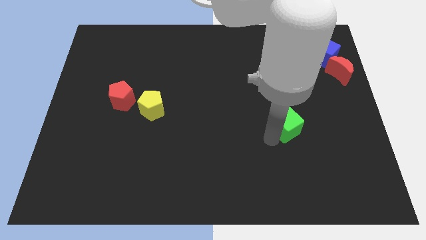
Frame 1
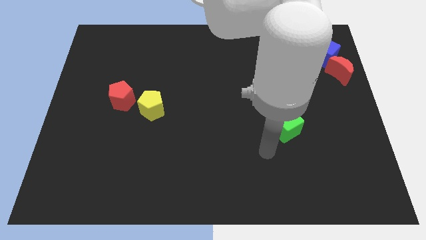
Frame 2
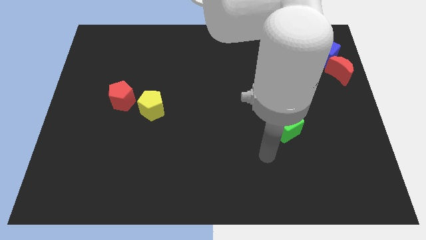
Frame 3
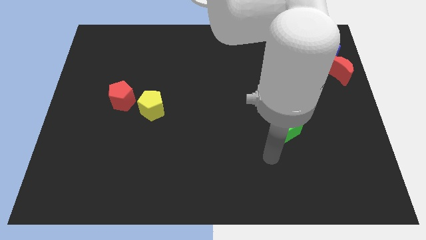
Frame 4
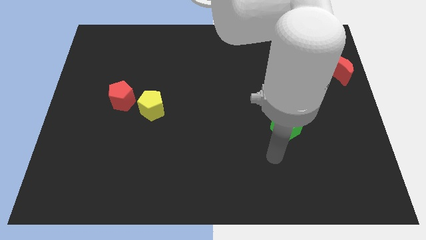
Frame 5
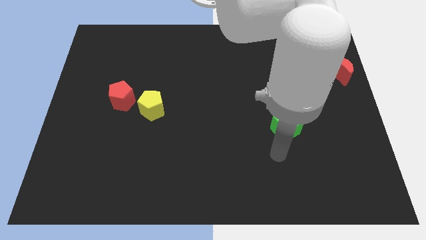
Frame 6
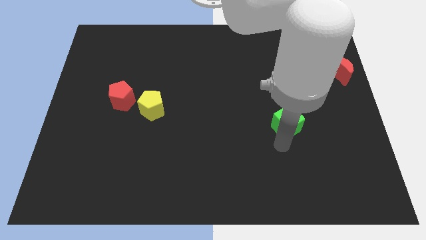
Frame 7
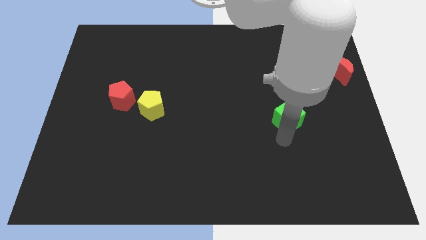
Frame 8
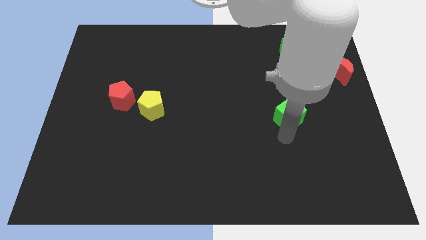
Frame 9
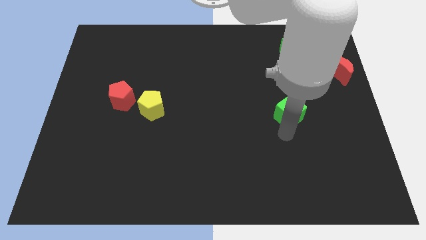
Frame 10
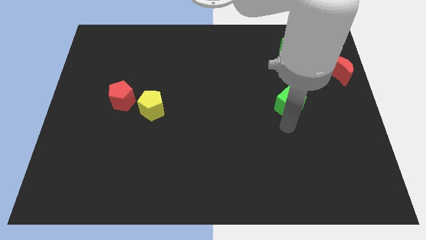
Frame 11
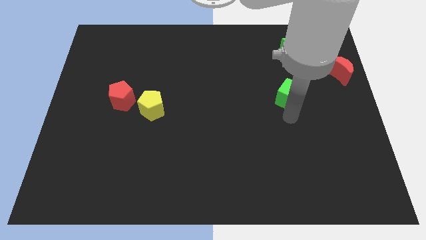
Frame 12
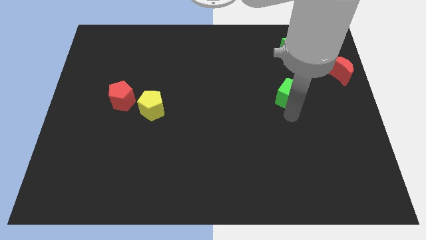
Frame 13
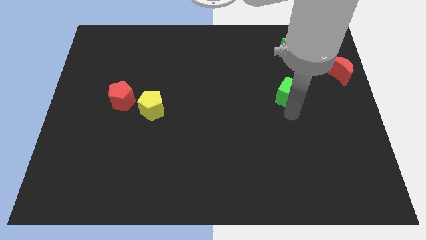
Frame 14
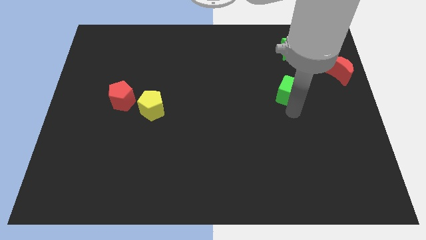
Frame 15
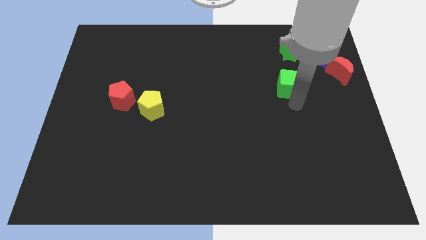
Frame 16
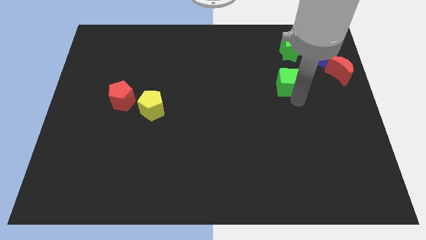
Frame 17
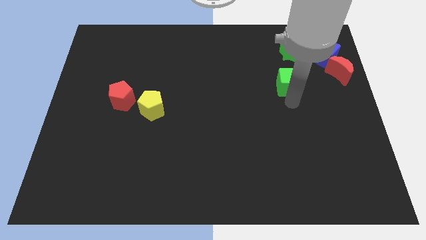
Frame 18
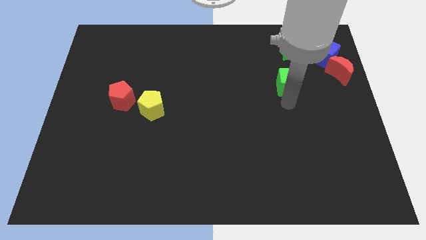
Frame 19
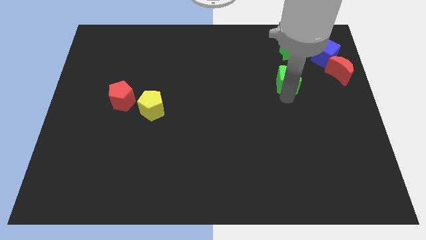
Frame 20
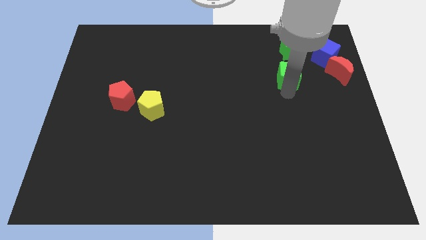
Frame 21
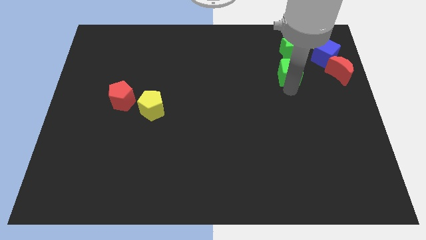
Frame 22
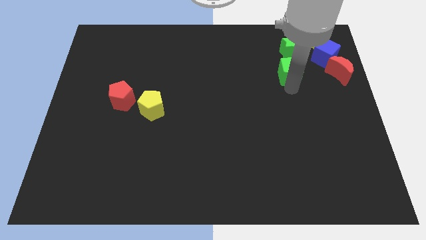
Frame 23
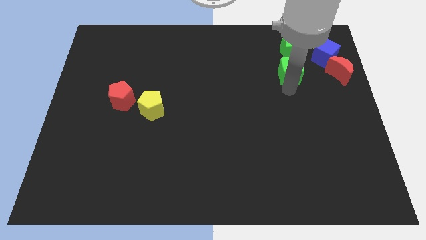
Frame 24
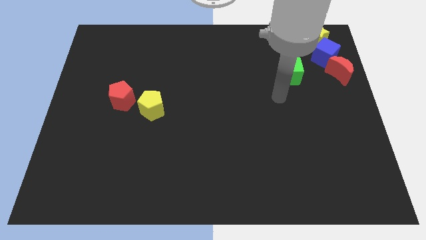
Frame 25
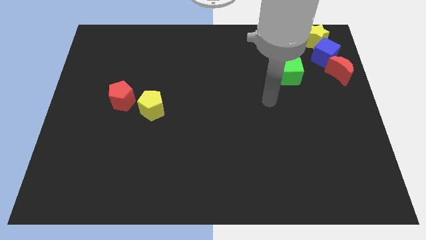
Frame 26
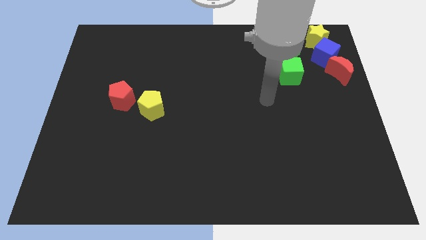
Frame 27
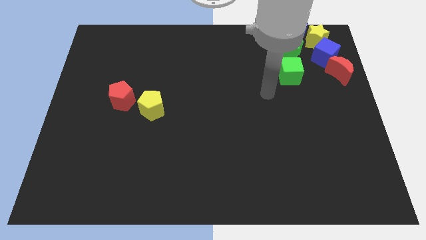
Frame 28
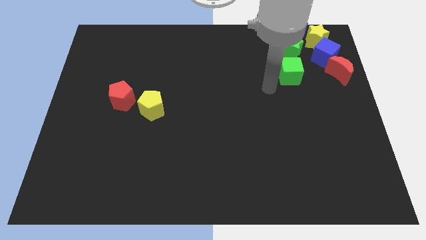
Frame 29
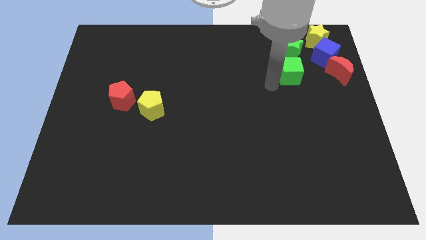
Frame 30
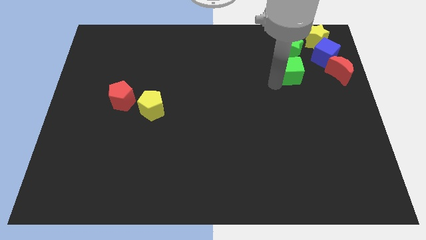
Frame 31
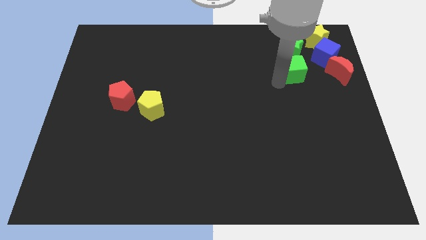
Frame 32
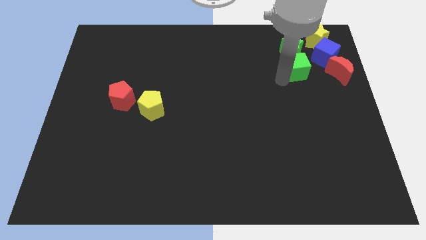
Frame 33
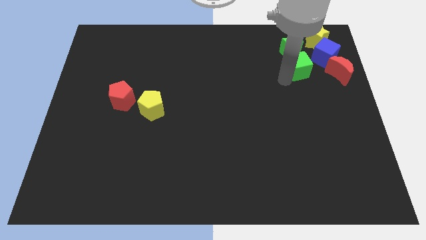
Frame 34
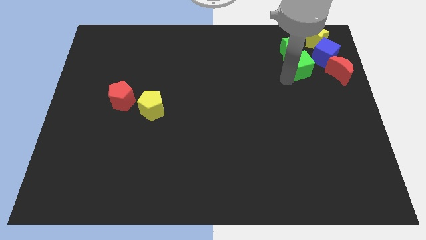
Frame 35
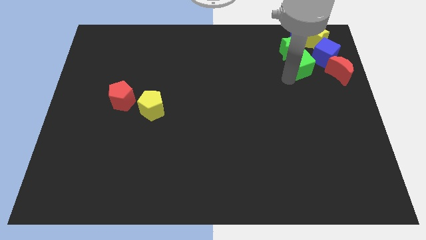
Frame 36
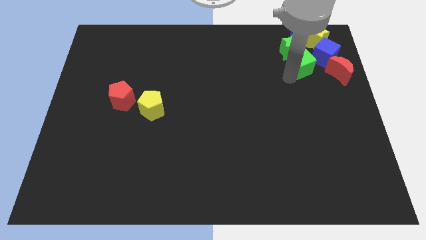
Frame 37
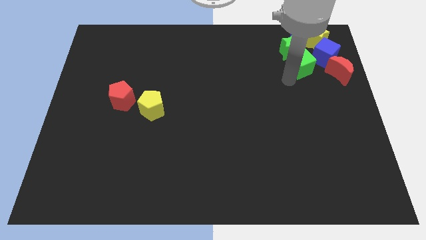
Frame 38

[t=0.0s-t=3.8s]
place the green cube below the green star

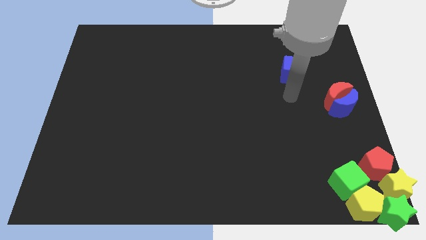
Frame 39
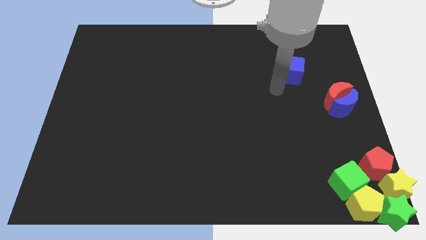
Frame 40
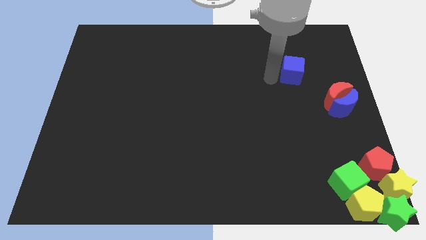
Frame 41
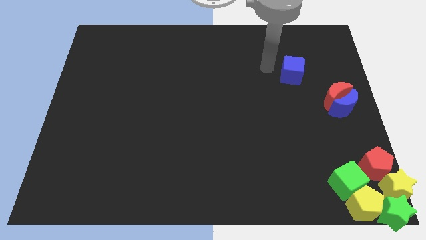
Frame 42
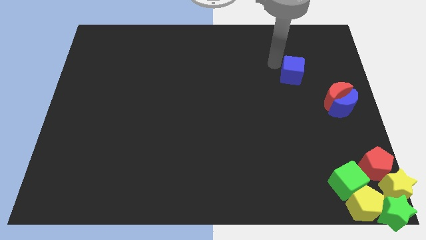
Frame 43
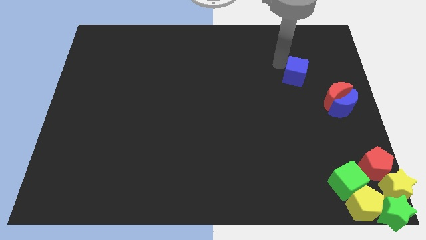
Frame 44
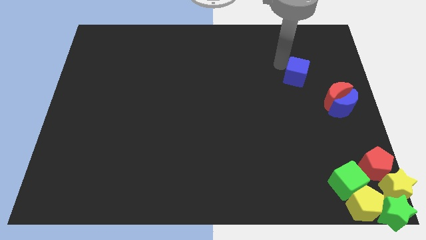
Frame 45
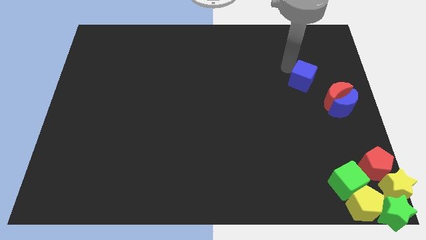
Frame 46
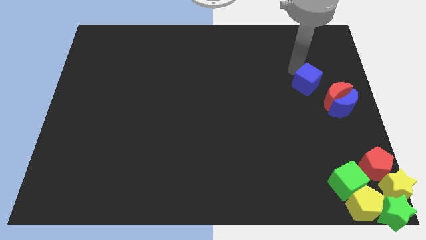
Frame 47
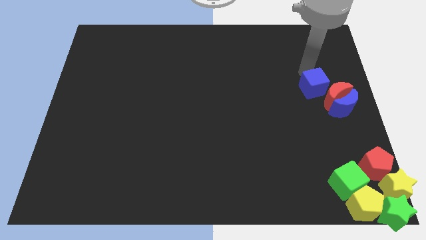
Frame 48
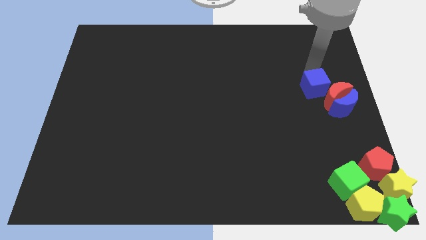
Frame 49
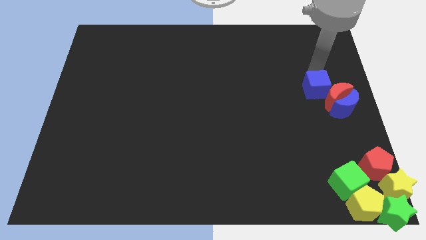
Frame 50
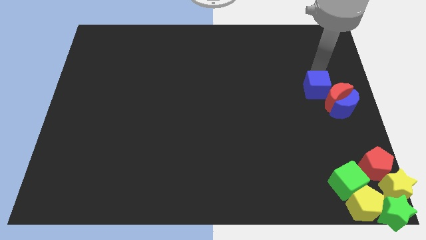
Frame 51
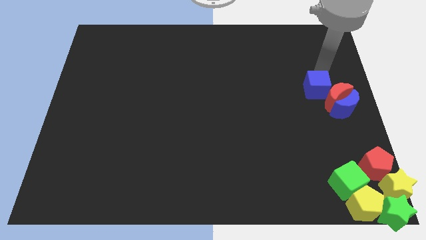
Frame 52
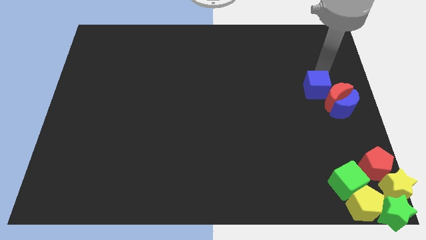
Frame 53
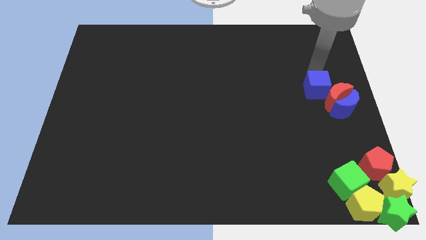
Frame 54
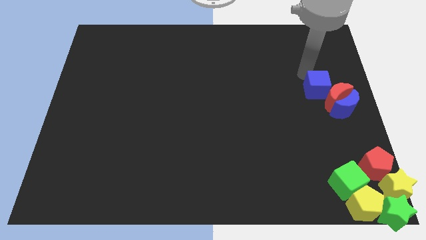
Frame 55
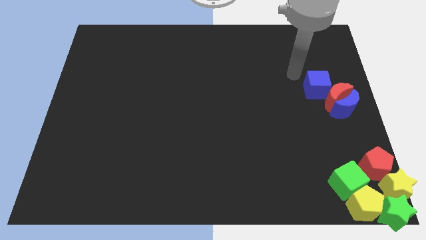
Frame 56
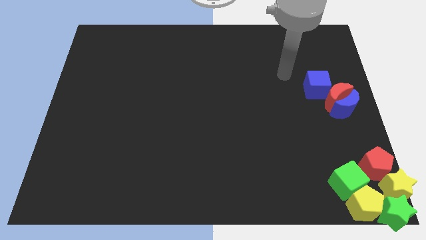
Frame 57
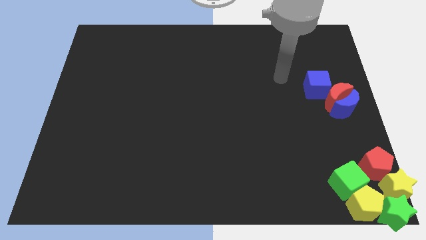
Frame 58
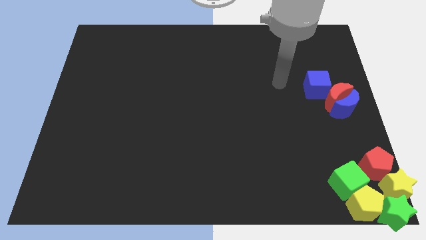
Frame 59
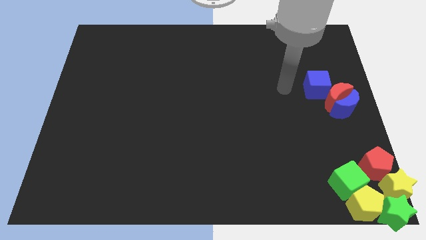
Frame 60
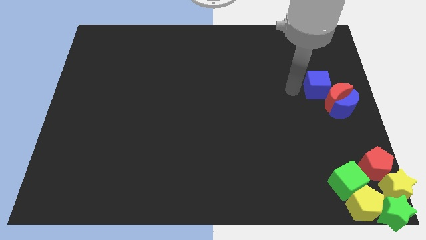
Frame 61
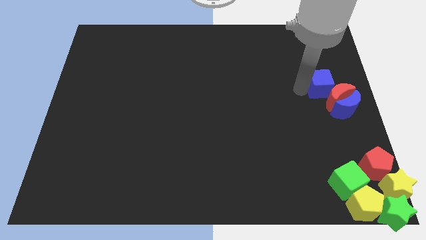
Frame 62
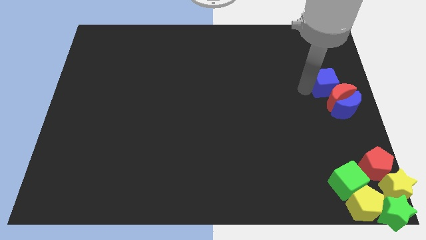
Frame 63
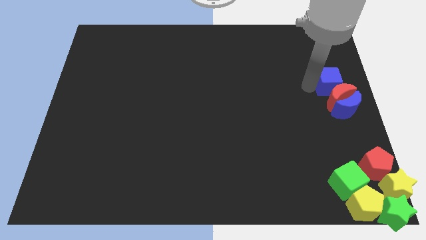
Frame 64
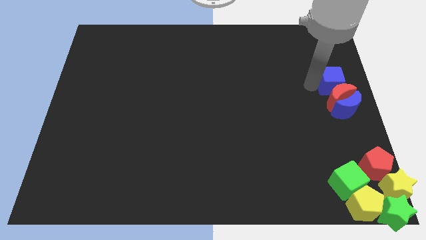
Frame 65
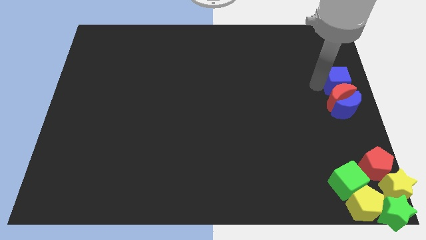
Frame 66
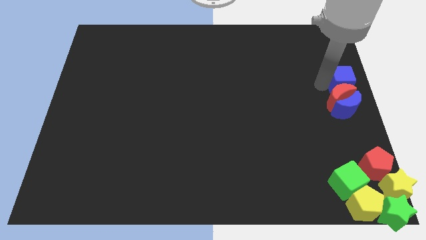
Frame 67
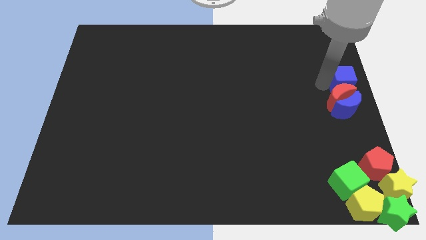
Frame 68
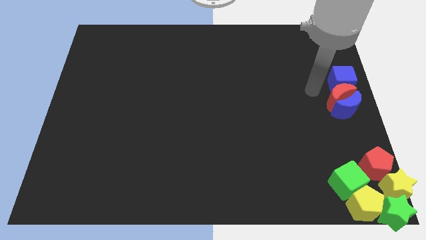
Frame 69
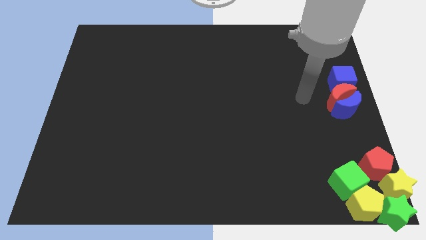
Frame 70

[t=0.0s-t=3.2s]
push the cube into the red moon

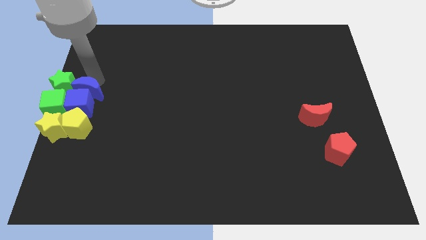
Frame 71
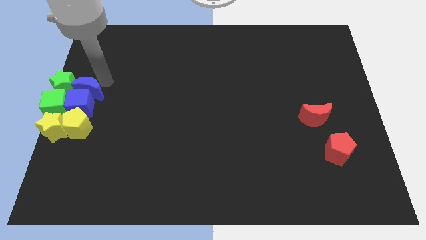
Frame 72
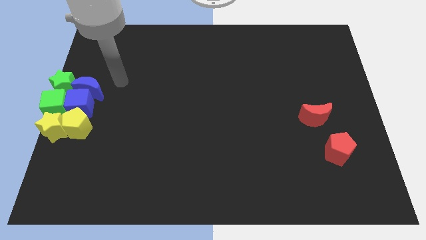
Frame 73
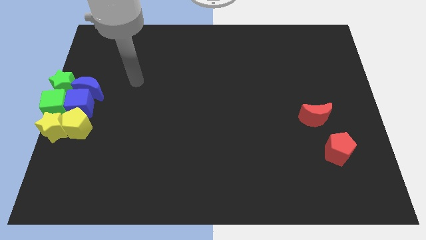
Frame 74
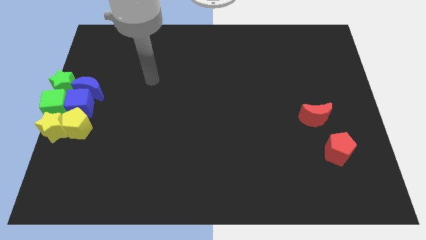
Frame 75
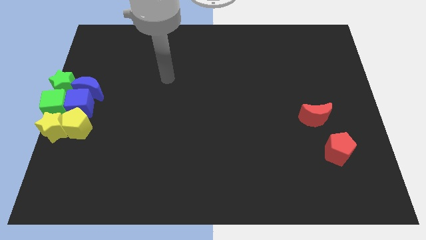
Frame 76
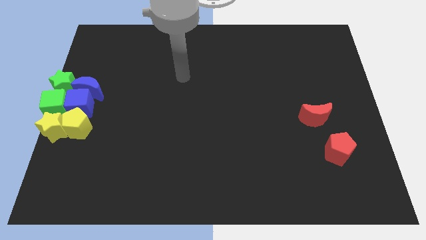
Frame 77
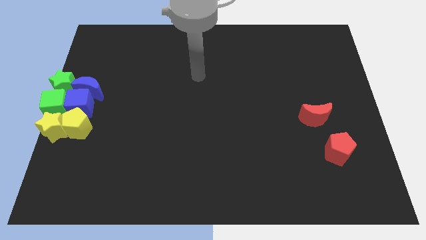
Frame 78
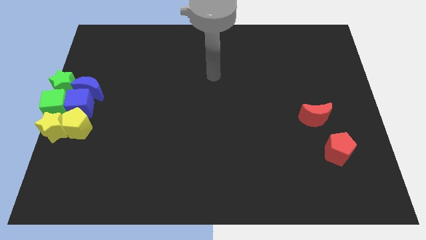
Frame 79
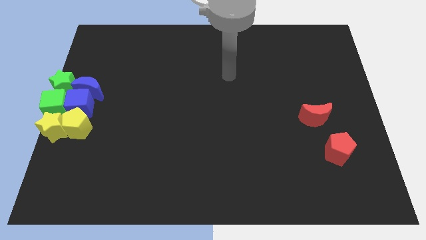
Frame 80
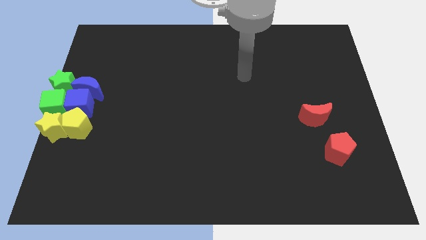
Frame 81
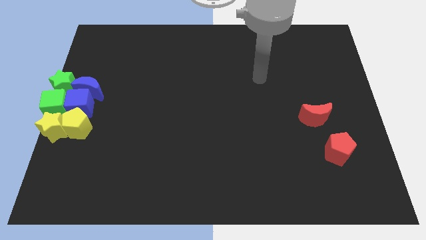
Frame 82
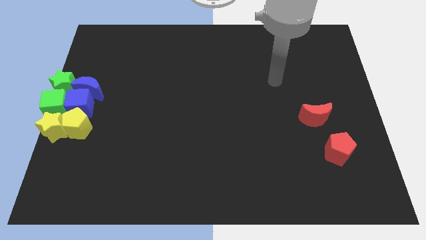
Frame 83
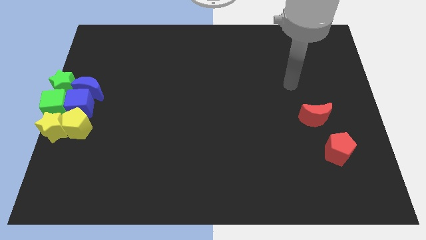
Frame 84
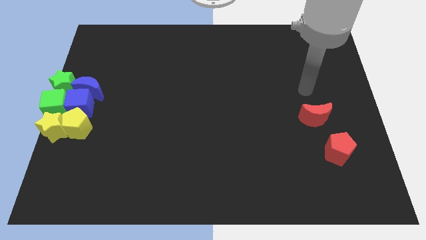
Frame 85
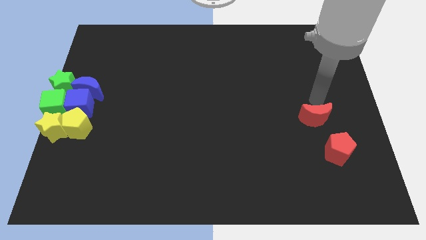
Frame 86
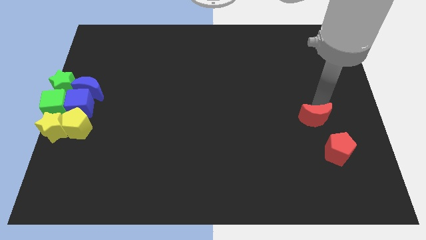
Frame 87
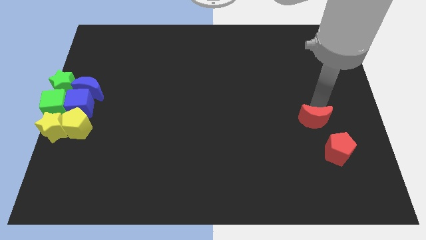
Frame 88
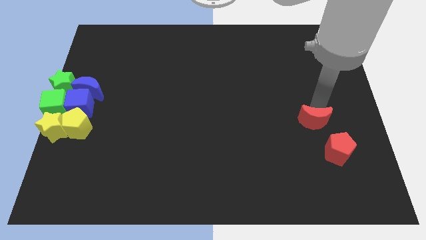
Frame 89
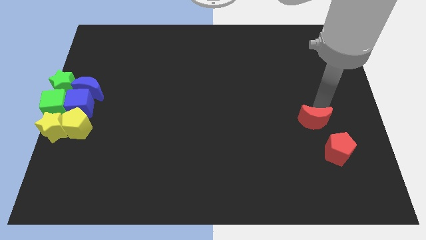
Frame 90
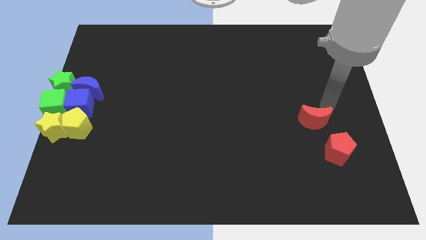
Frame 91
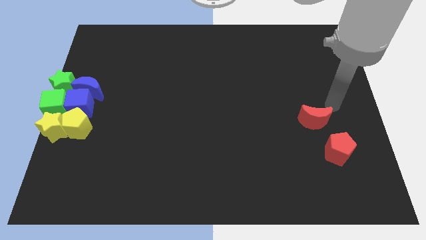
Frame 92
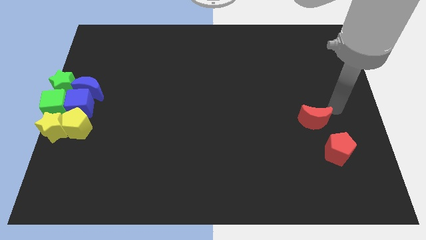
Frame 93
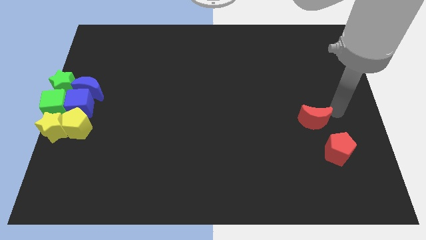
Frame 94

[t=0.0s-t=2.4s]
move your arm away from the blue moon
